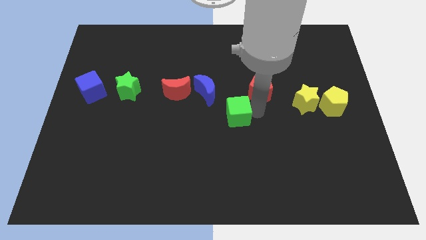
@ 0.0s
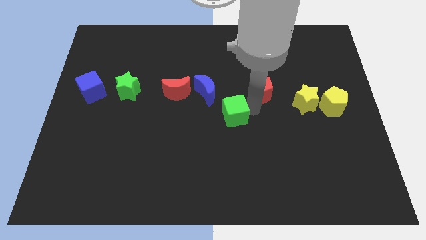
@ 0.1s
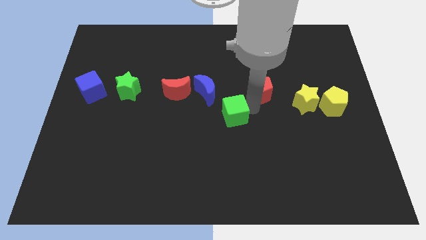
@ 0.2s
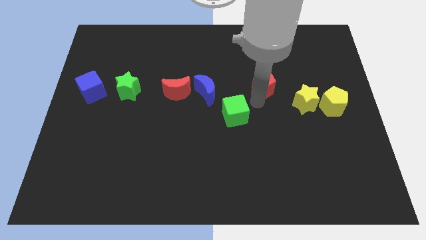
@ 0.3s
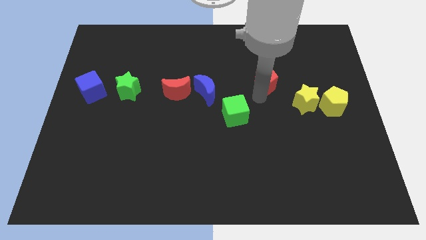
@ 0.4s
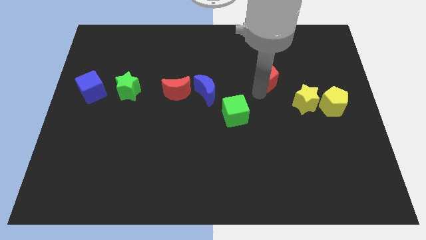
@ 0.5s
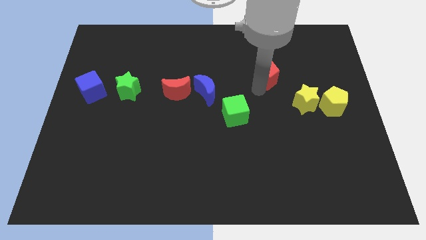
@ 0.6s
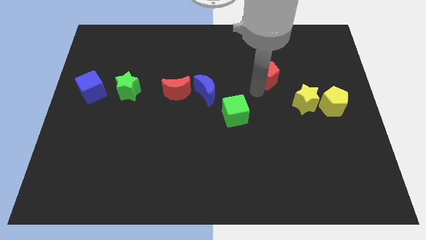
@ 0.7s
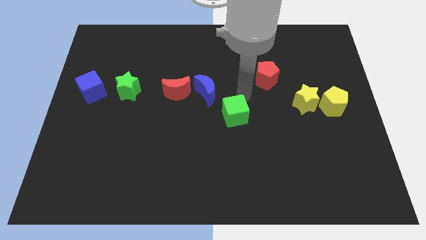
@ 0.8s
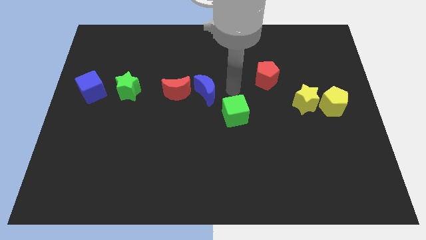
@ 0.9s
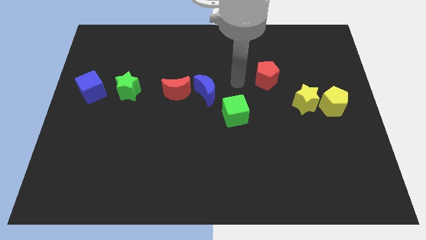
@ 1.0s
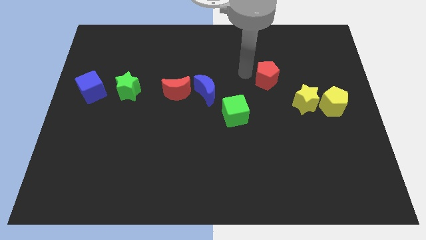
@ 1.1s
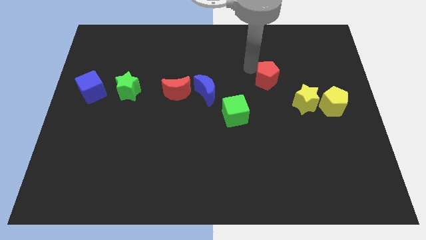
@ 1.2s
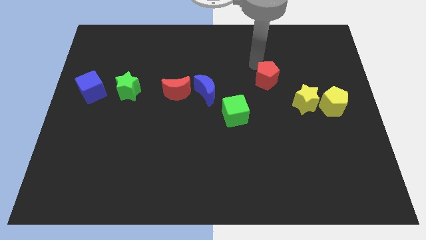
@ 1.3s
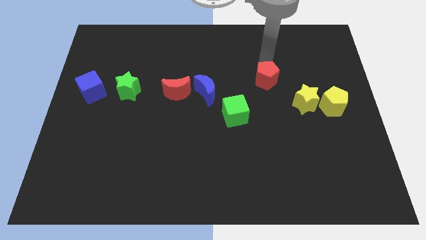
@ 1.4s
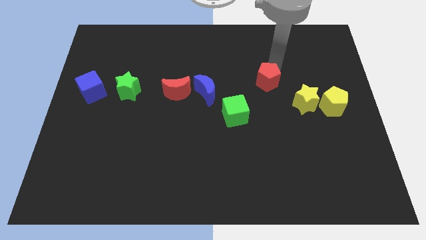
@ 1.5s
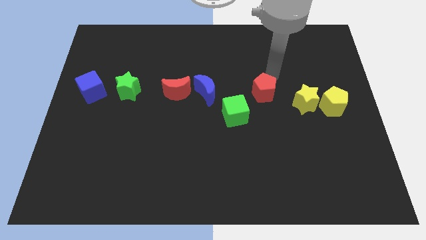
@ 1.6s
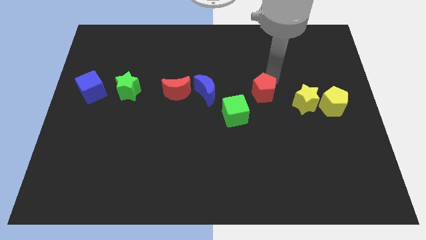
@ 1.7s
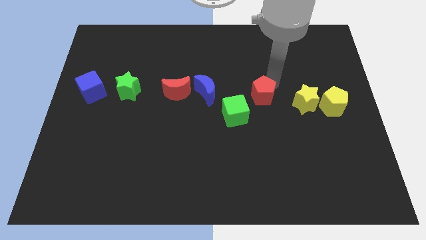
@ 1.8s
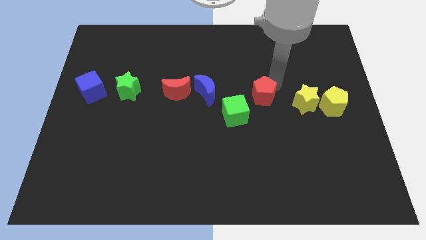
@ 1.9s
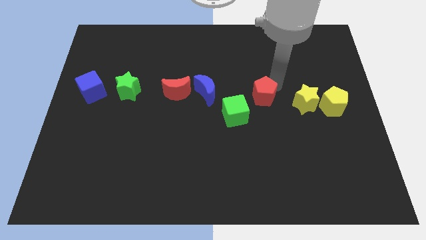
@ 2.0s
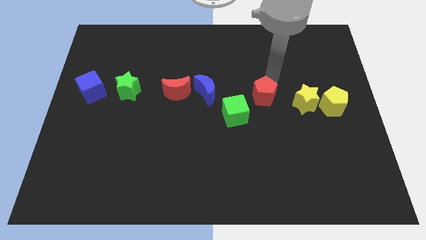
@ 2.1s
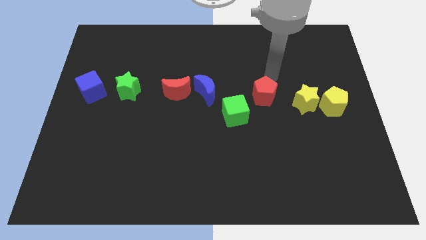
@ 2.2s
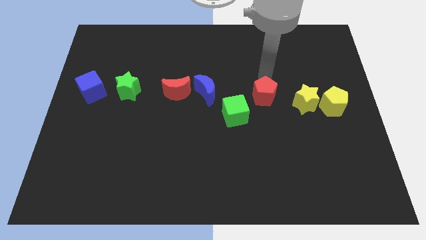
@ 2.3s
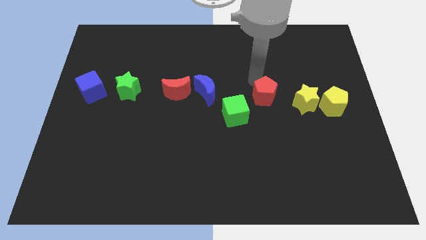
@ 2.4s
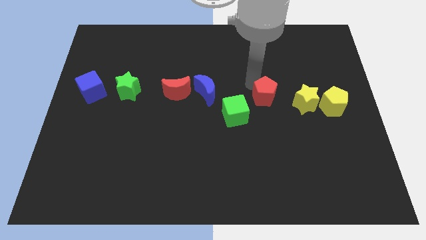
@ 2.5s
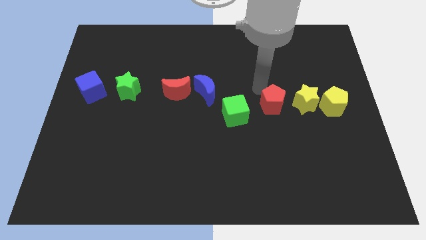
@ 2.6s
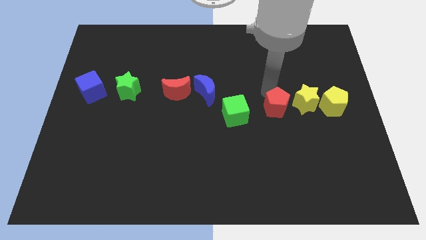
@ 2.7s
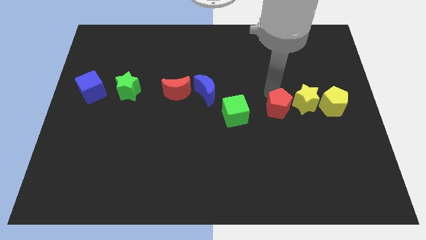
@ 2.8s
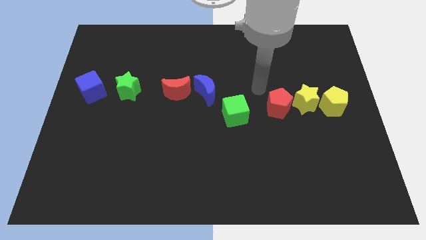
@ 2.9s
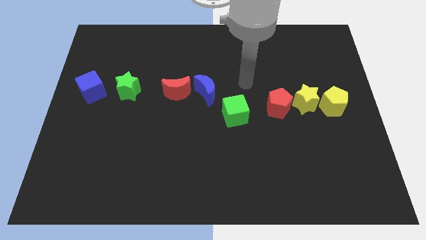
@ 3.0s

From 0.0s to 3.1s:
place the red pentagon left to the yellow star

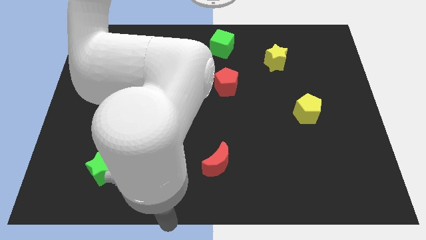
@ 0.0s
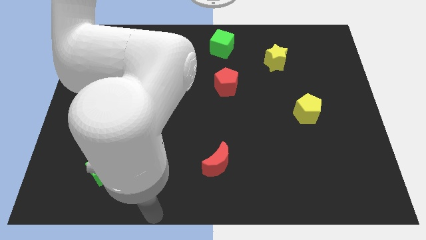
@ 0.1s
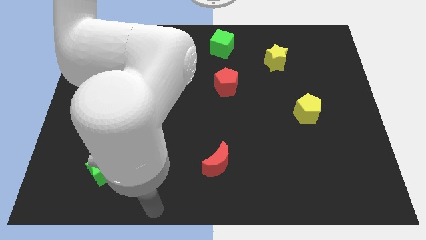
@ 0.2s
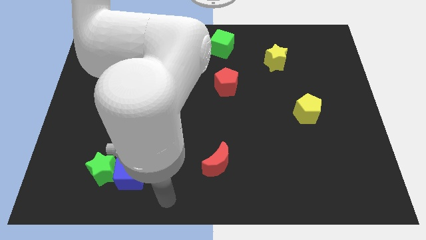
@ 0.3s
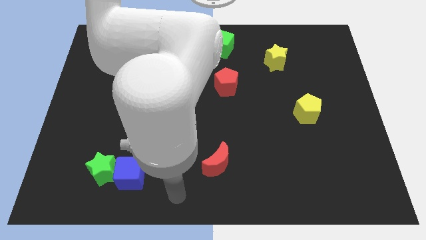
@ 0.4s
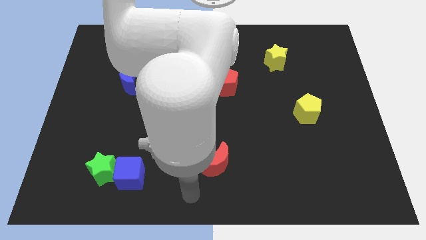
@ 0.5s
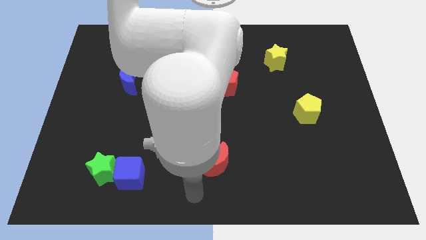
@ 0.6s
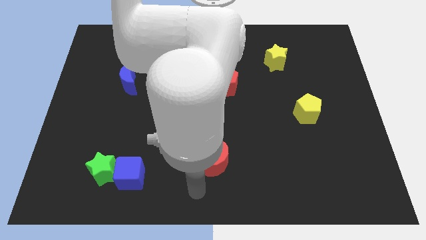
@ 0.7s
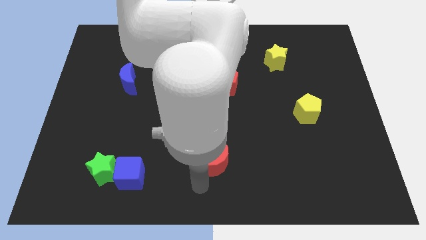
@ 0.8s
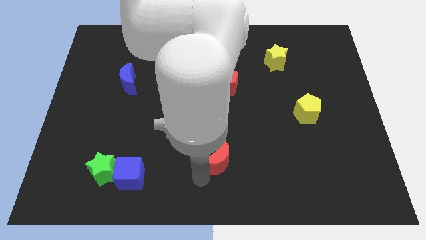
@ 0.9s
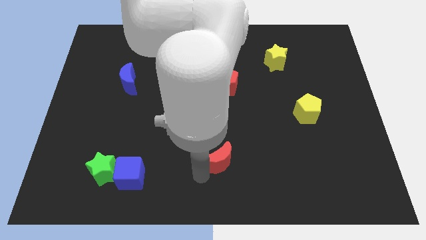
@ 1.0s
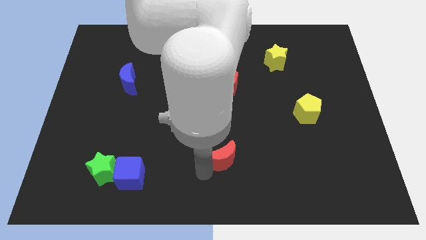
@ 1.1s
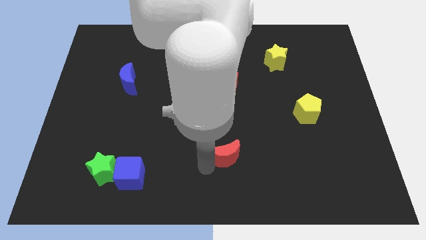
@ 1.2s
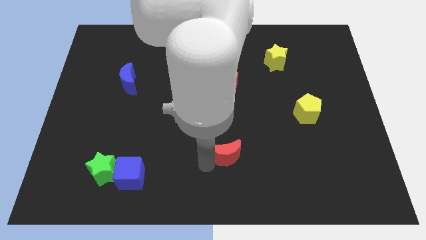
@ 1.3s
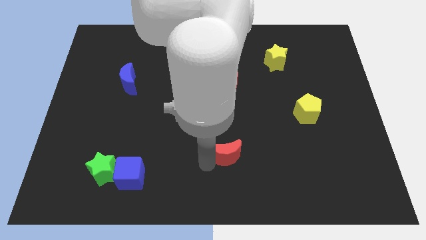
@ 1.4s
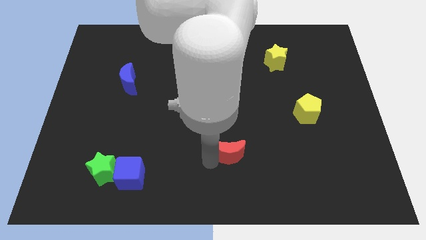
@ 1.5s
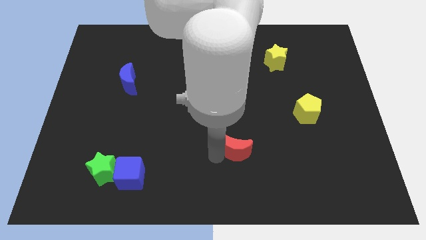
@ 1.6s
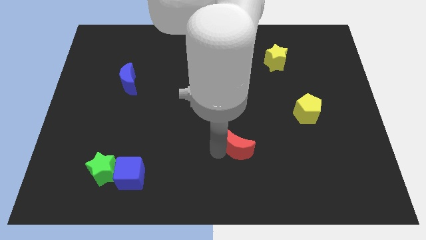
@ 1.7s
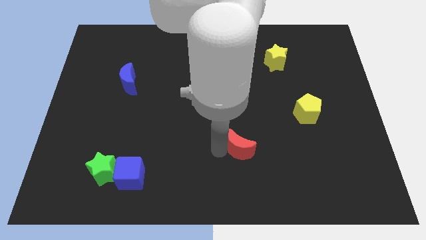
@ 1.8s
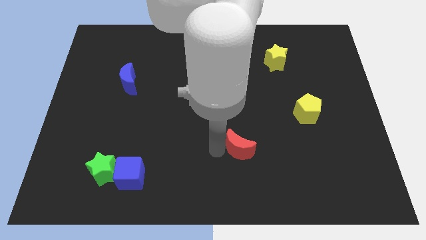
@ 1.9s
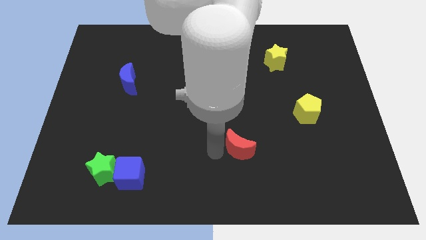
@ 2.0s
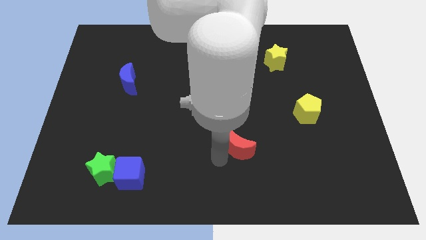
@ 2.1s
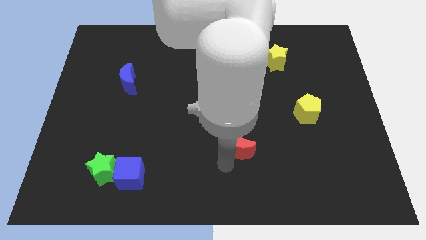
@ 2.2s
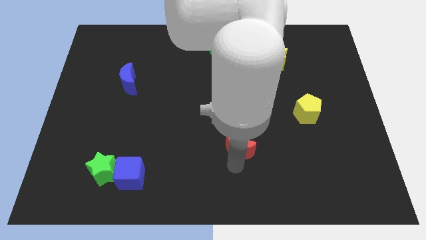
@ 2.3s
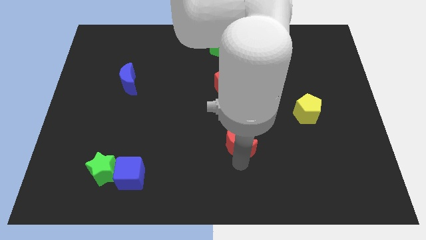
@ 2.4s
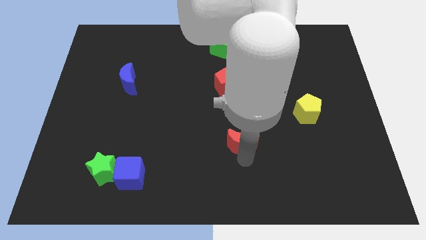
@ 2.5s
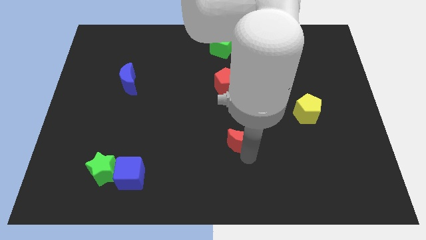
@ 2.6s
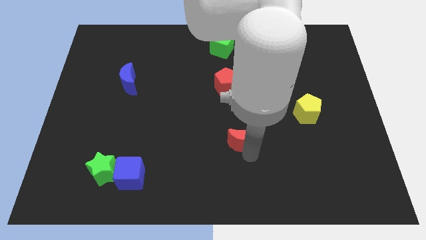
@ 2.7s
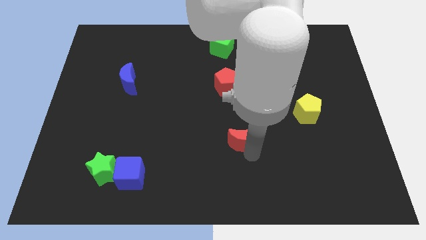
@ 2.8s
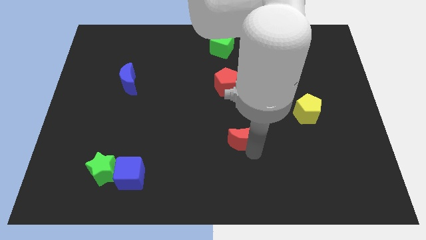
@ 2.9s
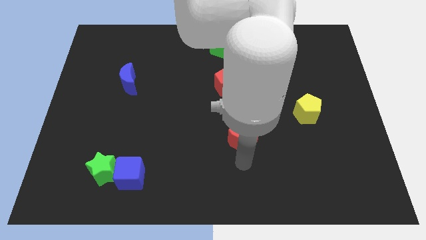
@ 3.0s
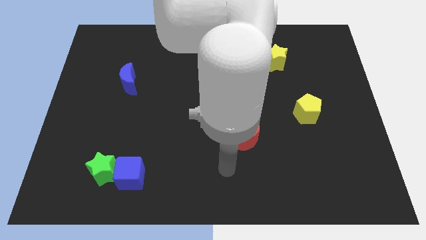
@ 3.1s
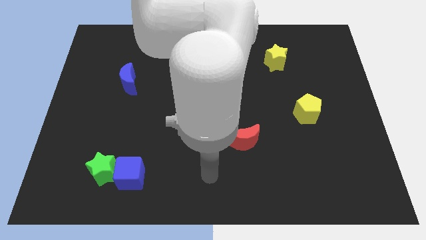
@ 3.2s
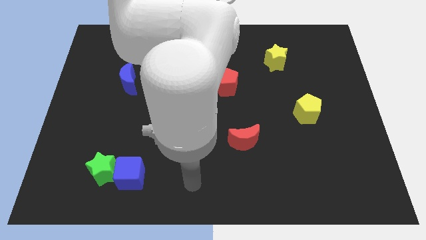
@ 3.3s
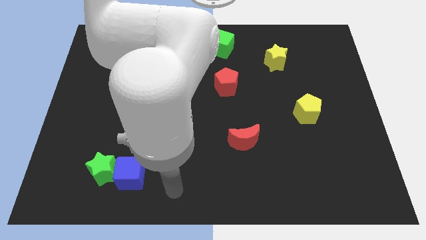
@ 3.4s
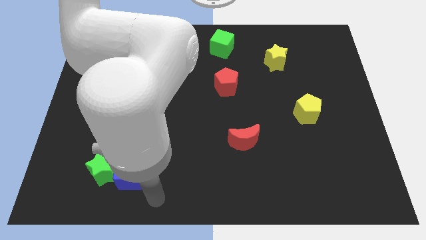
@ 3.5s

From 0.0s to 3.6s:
push red moon towards red pentagon

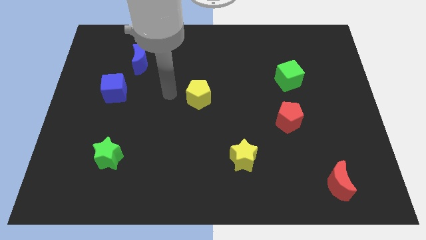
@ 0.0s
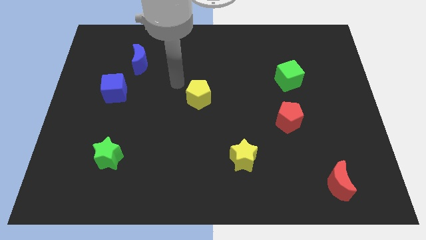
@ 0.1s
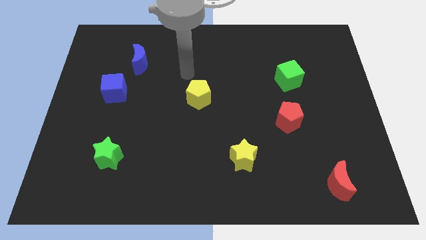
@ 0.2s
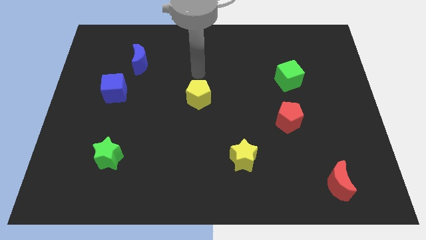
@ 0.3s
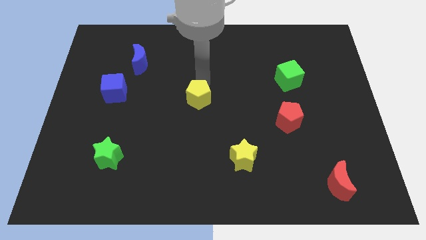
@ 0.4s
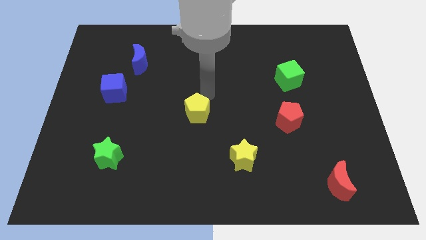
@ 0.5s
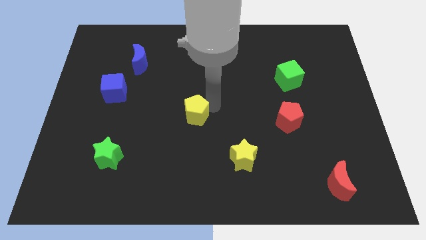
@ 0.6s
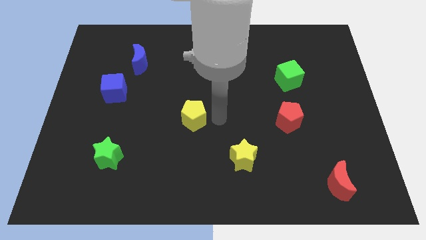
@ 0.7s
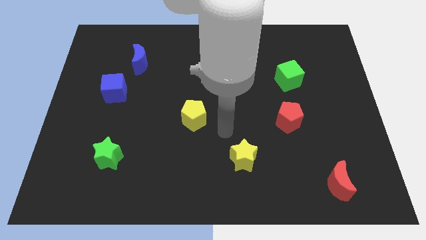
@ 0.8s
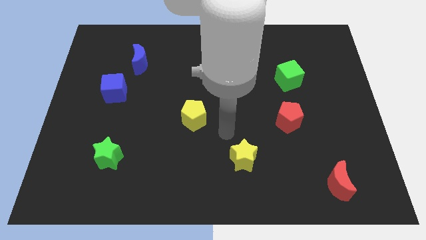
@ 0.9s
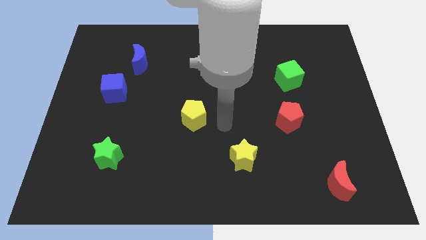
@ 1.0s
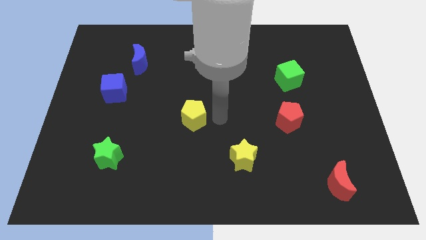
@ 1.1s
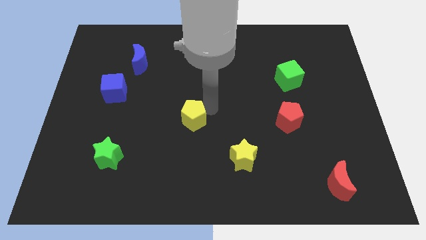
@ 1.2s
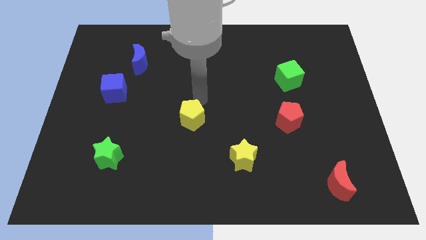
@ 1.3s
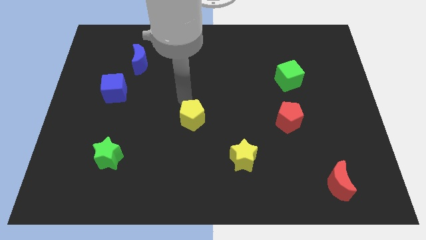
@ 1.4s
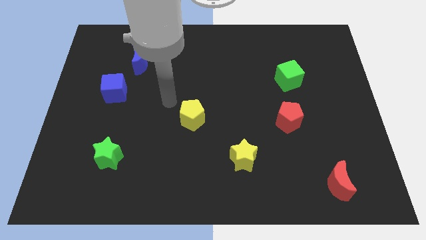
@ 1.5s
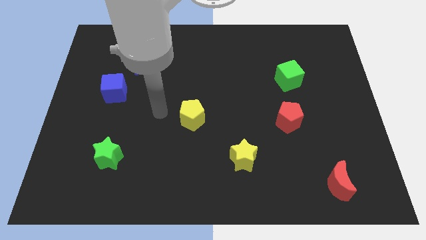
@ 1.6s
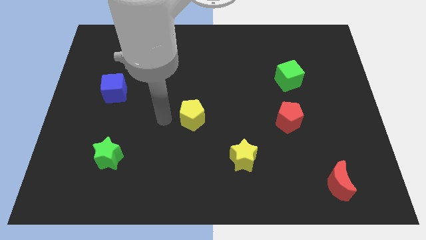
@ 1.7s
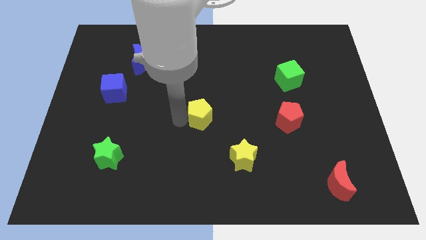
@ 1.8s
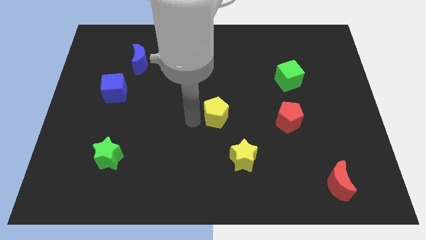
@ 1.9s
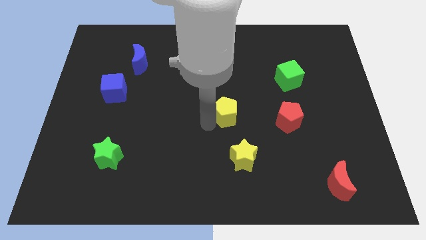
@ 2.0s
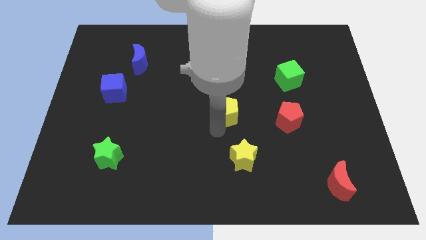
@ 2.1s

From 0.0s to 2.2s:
move the yellow pentagon to the left of red pentagon
